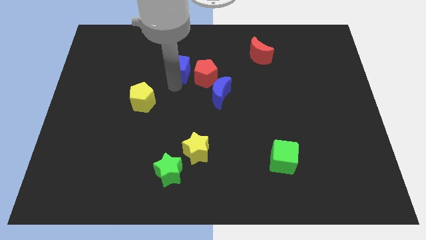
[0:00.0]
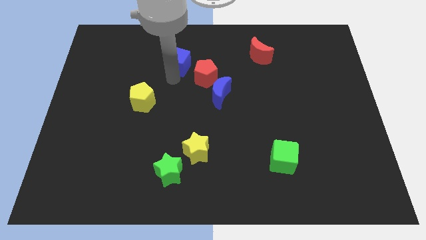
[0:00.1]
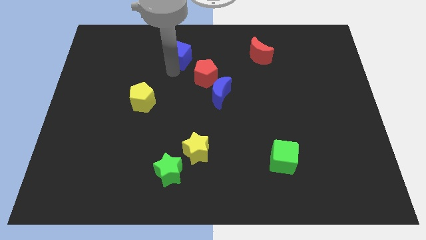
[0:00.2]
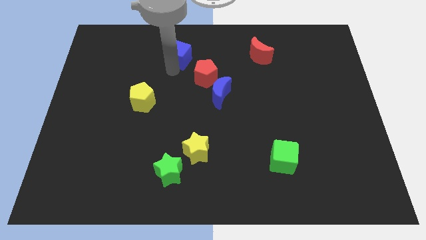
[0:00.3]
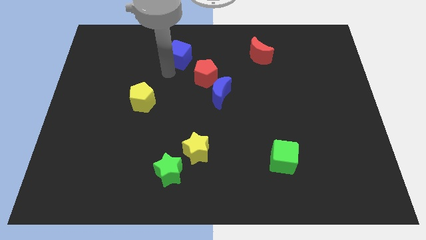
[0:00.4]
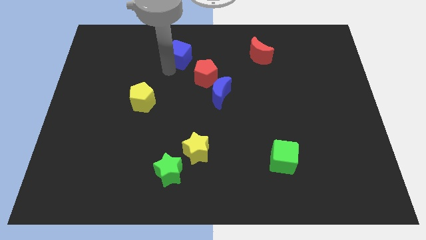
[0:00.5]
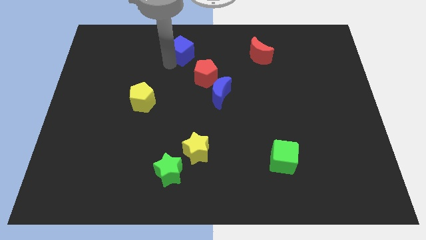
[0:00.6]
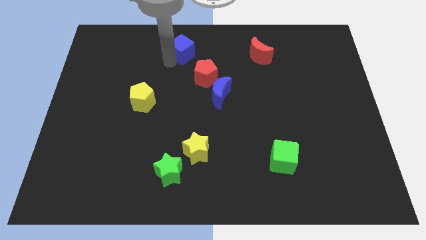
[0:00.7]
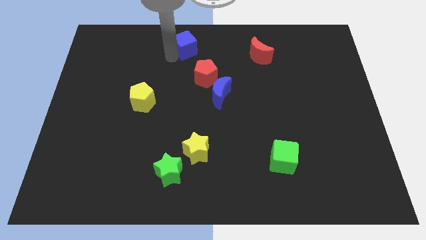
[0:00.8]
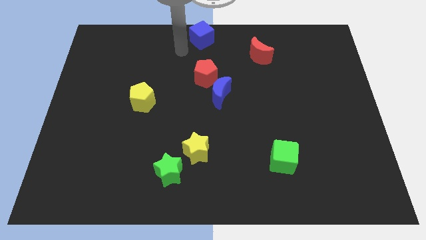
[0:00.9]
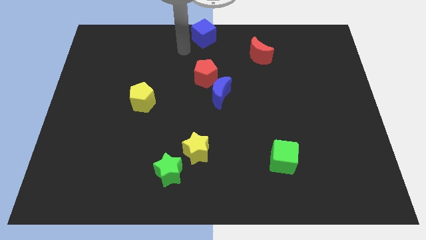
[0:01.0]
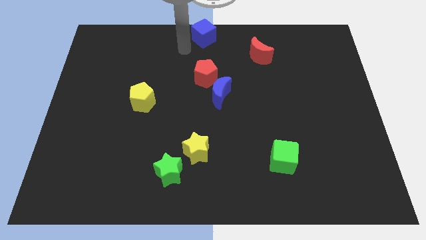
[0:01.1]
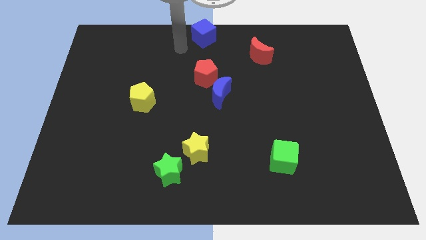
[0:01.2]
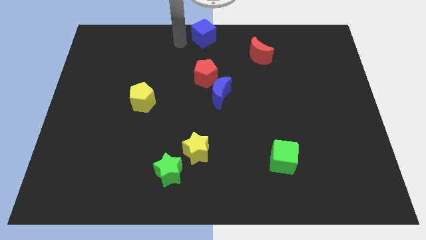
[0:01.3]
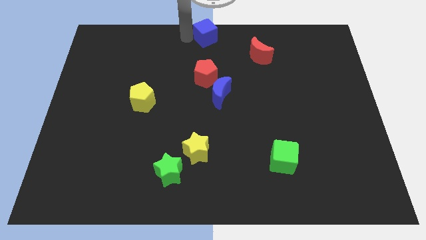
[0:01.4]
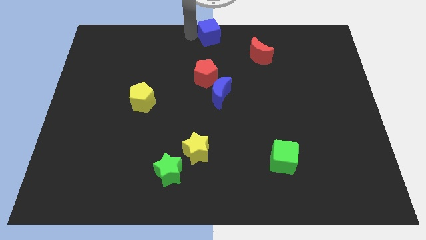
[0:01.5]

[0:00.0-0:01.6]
move the blue cube above the red pentagon

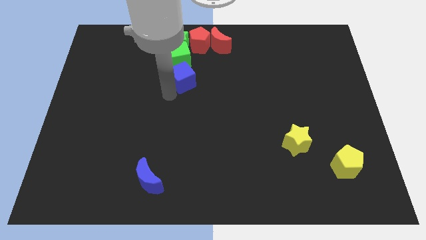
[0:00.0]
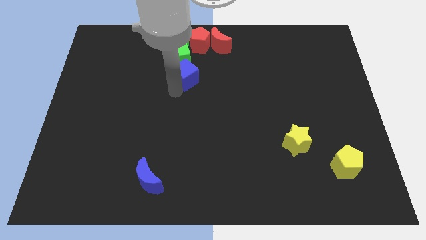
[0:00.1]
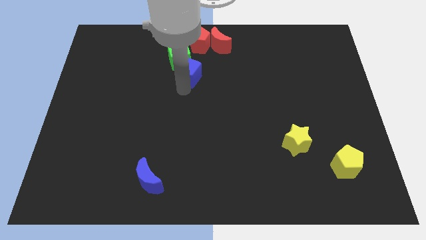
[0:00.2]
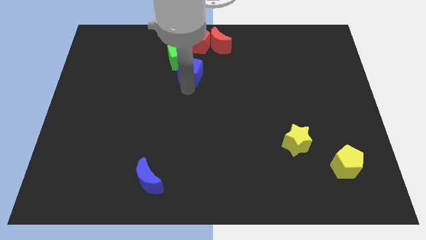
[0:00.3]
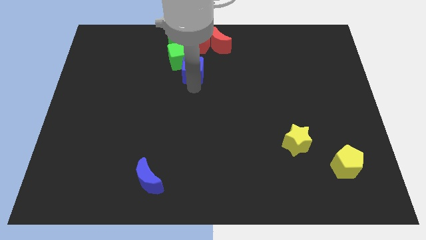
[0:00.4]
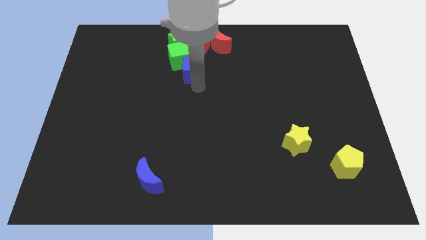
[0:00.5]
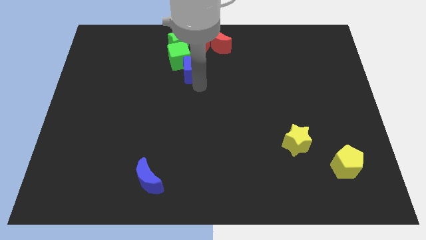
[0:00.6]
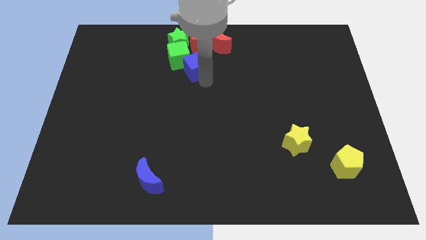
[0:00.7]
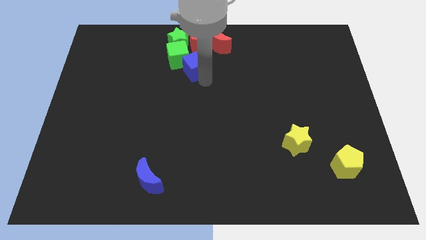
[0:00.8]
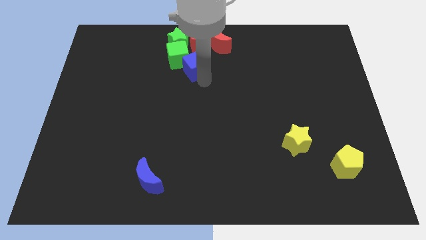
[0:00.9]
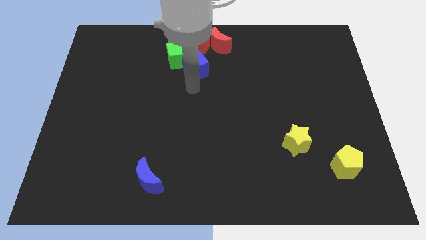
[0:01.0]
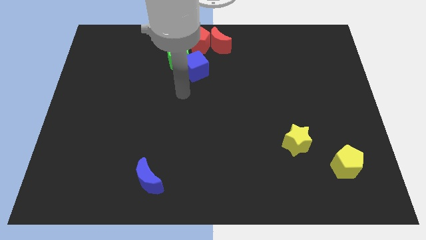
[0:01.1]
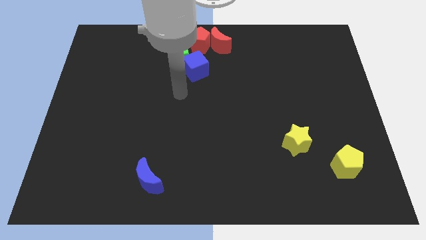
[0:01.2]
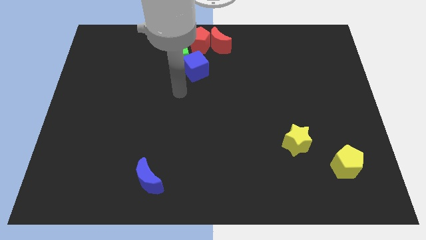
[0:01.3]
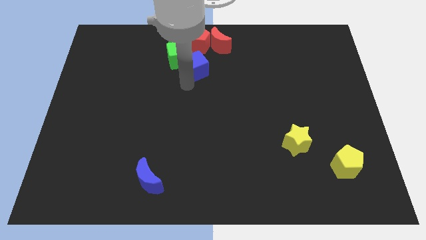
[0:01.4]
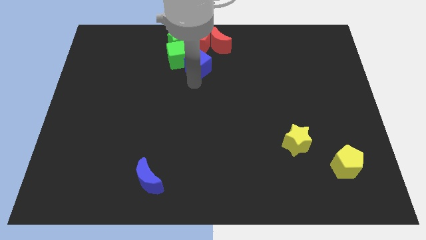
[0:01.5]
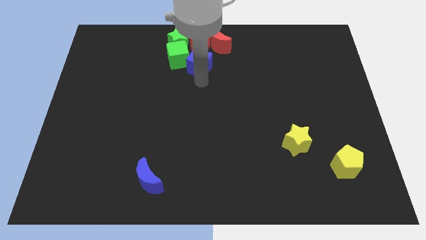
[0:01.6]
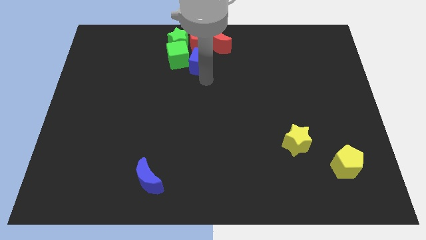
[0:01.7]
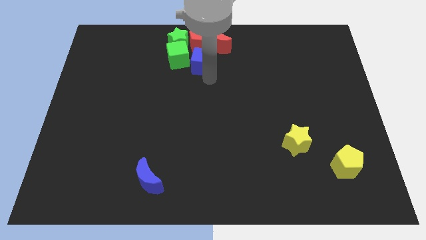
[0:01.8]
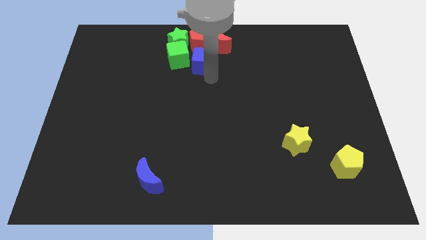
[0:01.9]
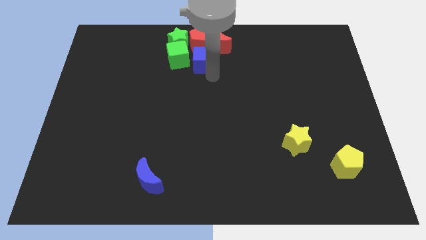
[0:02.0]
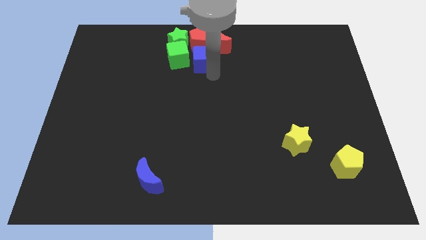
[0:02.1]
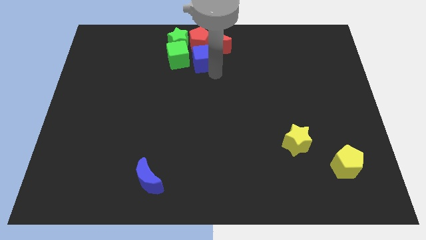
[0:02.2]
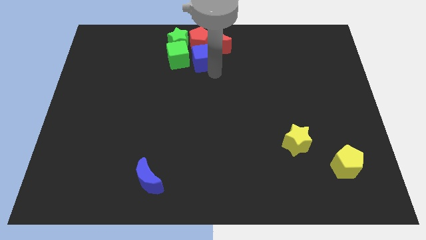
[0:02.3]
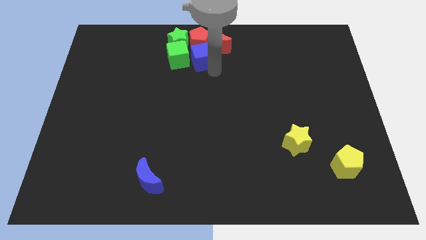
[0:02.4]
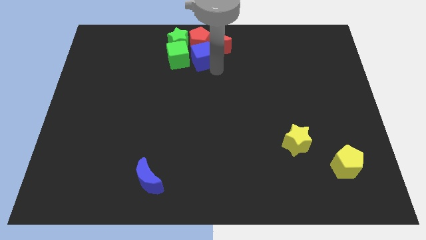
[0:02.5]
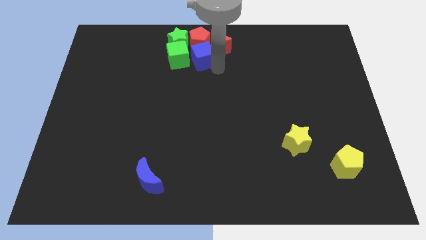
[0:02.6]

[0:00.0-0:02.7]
push the blue cube below the red pentagon

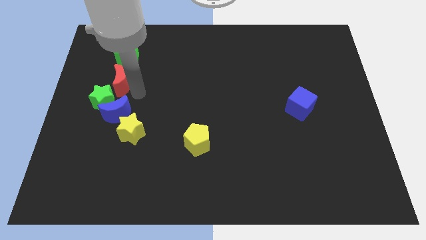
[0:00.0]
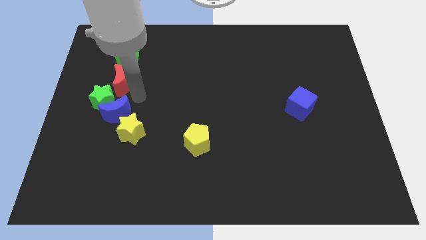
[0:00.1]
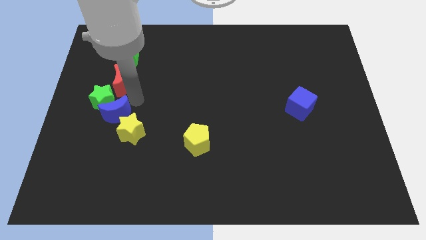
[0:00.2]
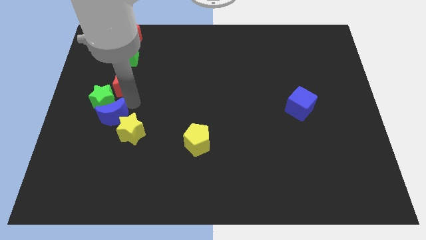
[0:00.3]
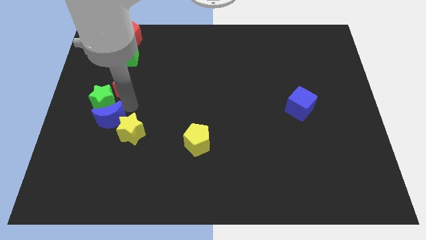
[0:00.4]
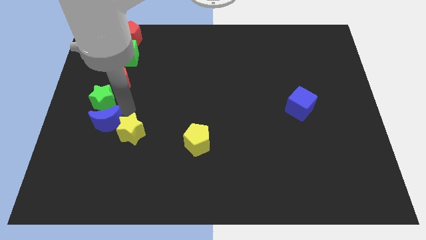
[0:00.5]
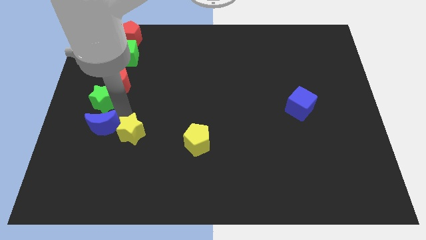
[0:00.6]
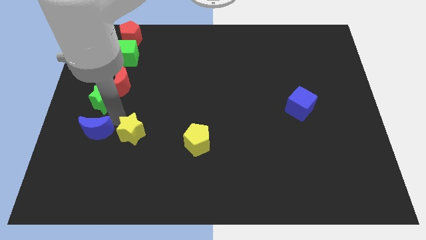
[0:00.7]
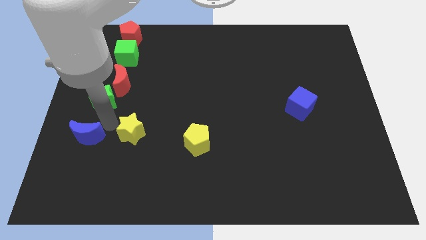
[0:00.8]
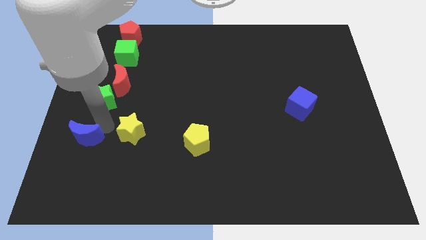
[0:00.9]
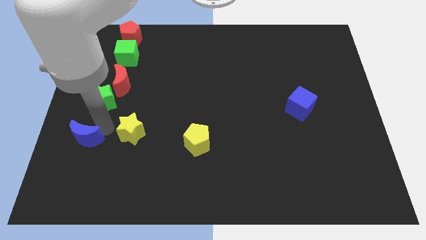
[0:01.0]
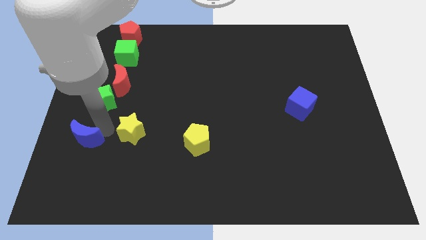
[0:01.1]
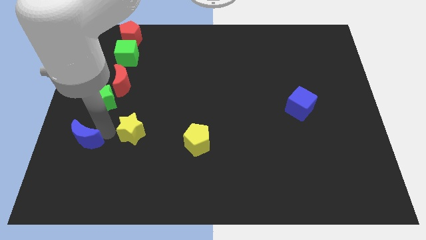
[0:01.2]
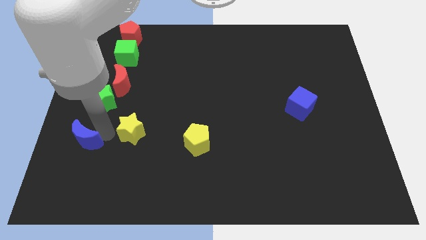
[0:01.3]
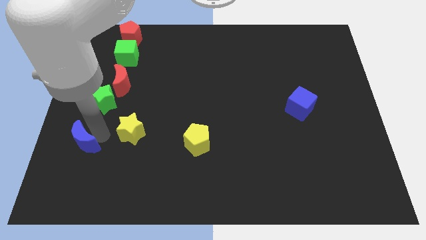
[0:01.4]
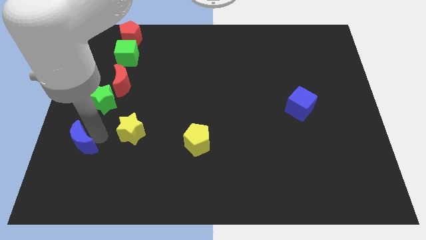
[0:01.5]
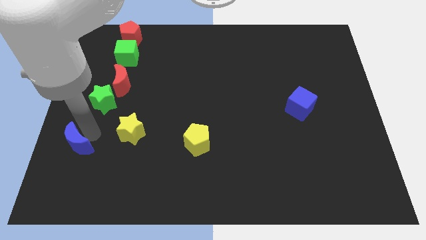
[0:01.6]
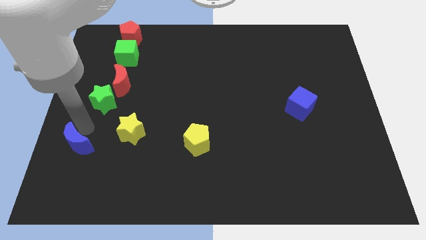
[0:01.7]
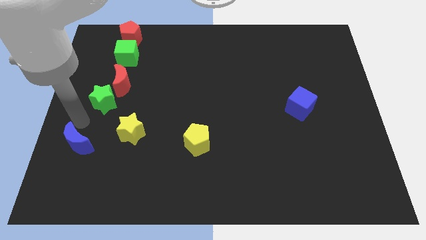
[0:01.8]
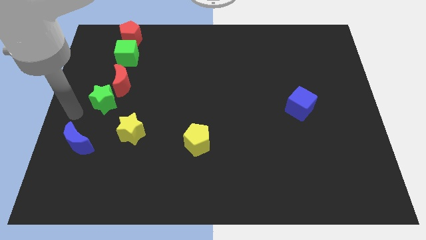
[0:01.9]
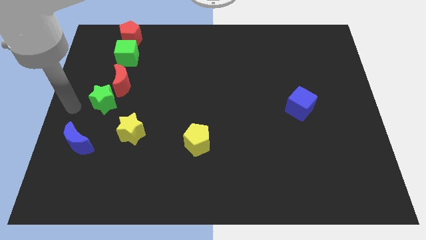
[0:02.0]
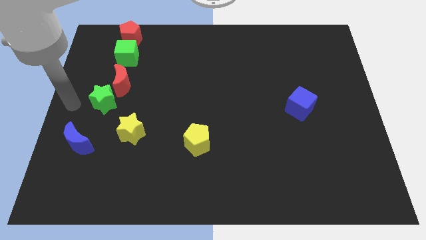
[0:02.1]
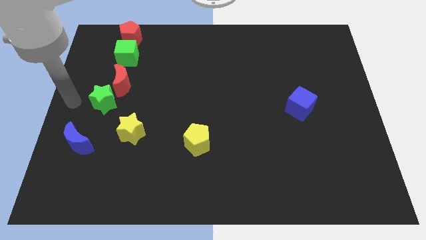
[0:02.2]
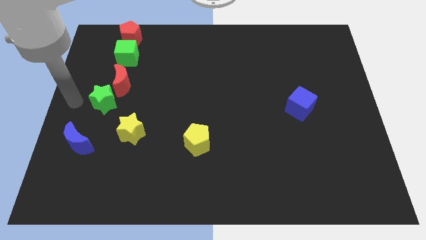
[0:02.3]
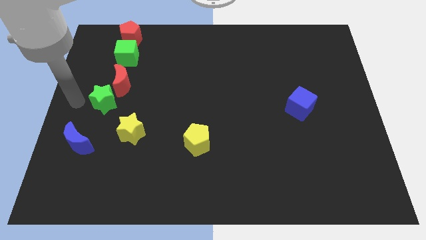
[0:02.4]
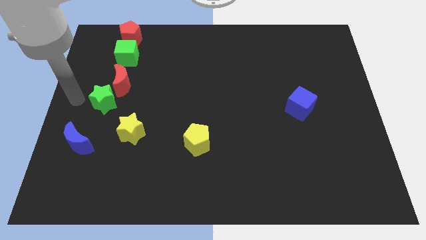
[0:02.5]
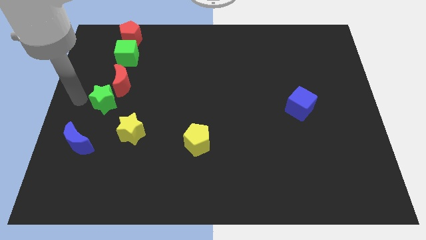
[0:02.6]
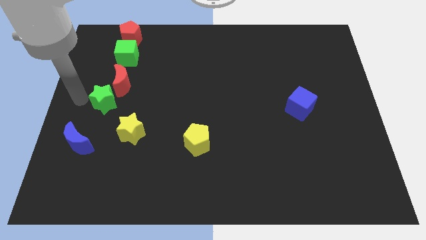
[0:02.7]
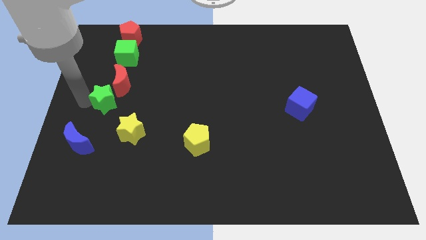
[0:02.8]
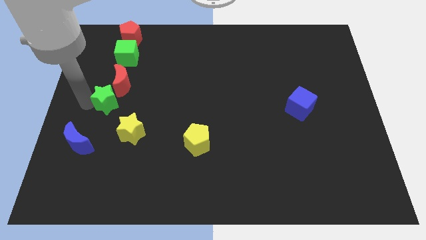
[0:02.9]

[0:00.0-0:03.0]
move blue crescent towards the left corner of the board

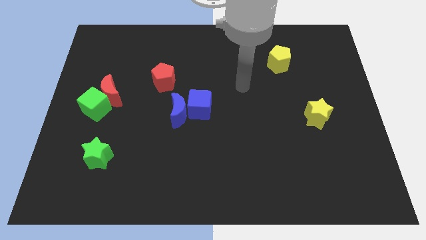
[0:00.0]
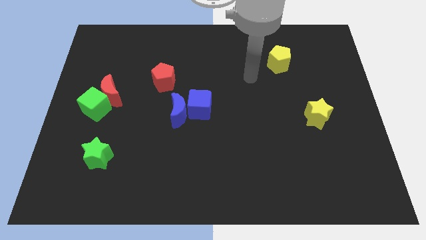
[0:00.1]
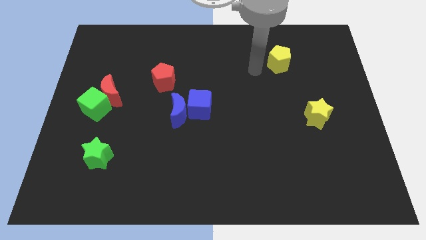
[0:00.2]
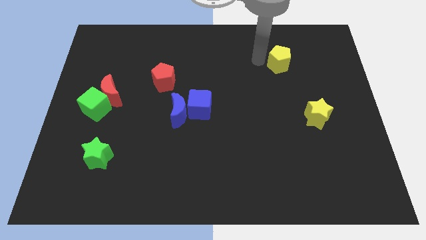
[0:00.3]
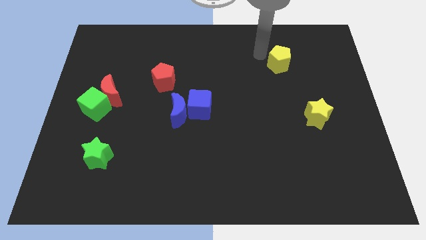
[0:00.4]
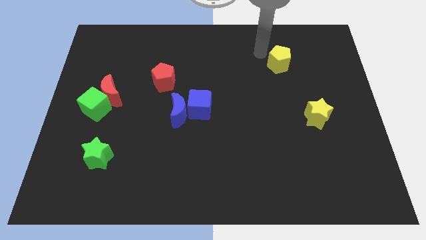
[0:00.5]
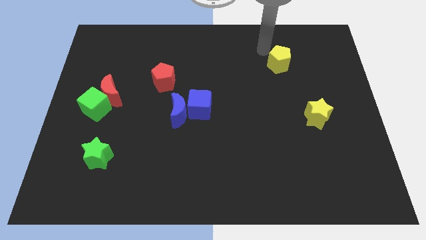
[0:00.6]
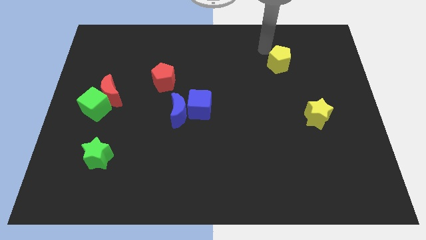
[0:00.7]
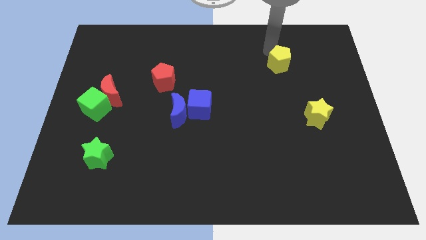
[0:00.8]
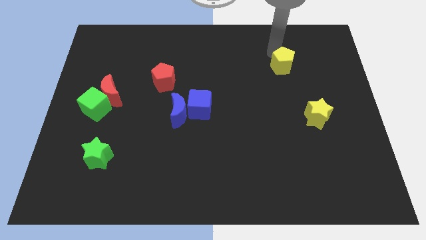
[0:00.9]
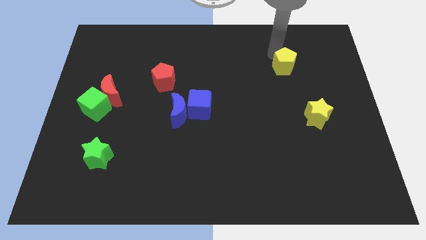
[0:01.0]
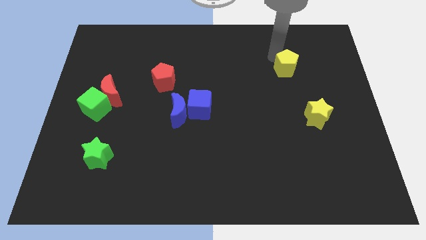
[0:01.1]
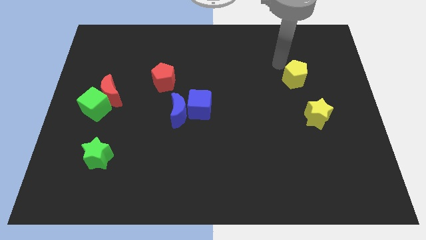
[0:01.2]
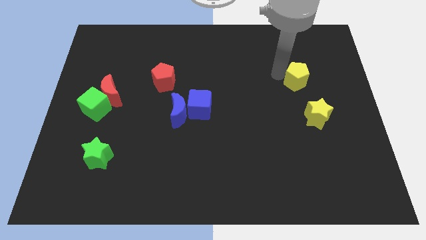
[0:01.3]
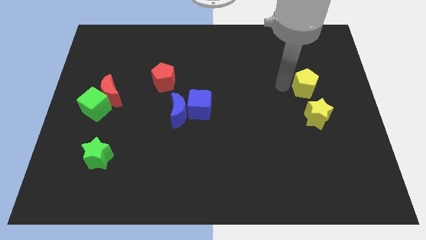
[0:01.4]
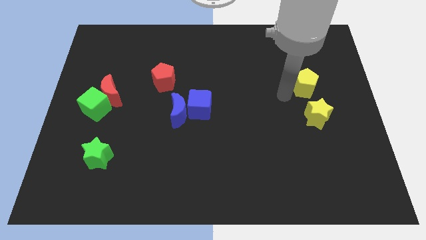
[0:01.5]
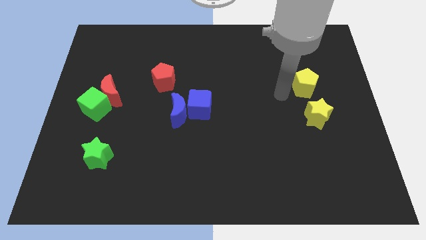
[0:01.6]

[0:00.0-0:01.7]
move the yellow pentagon to the top of yellow star
